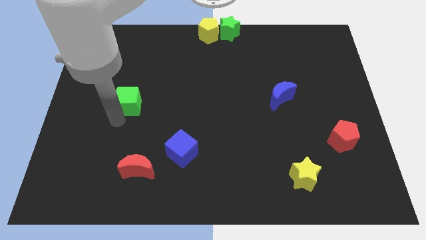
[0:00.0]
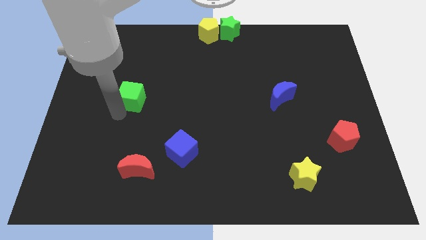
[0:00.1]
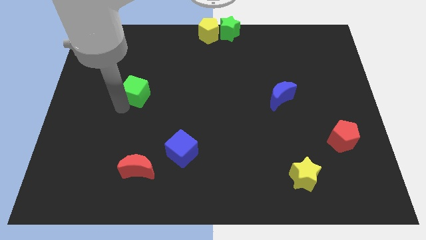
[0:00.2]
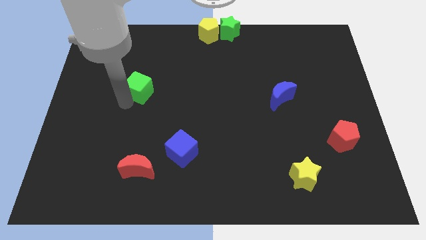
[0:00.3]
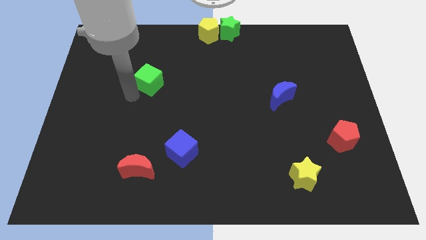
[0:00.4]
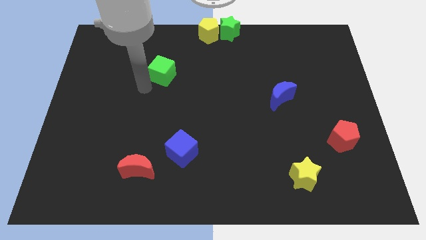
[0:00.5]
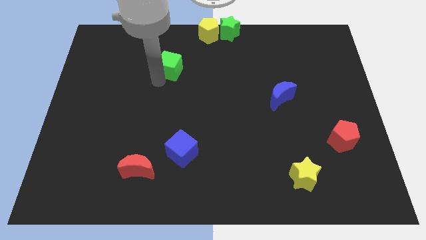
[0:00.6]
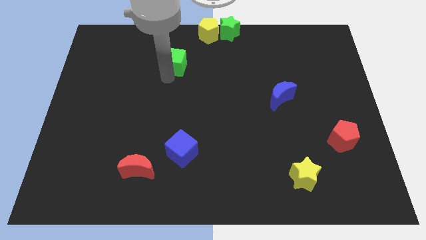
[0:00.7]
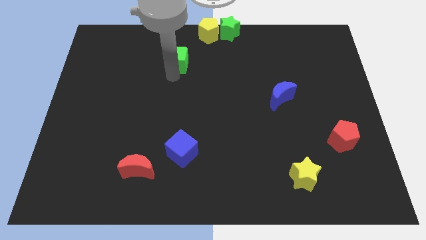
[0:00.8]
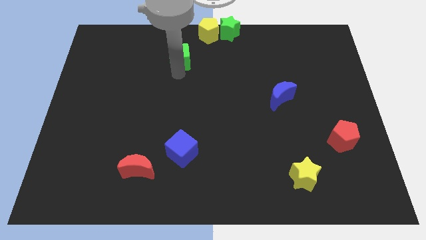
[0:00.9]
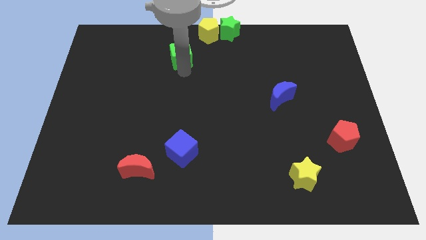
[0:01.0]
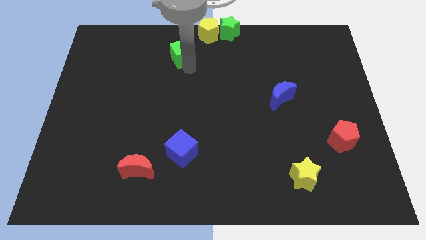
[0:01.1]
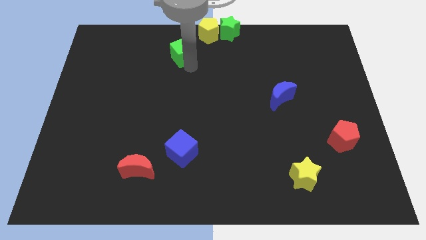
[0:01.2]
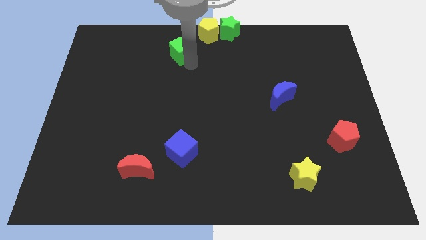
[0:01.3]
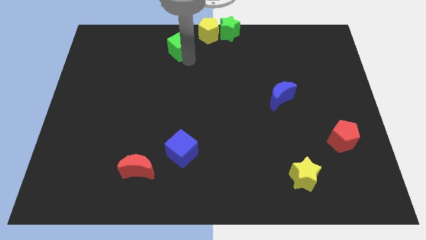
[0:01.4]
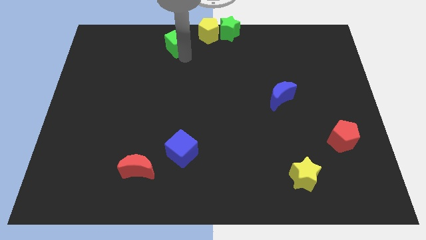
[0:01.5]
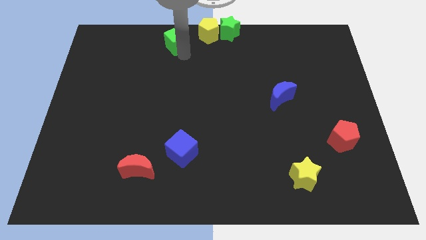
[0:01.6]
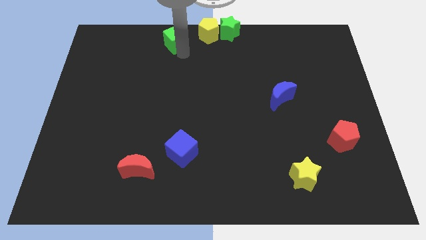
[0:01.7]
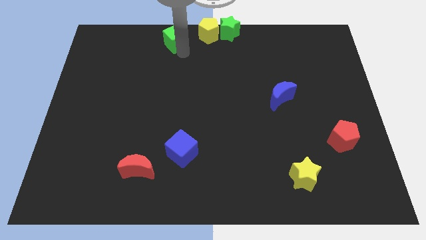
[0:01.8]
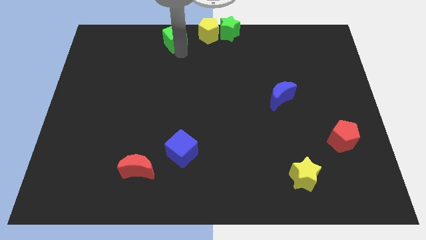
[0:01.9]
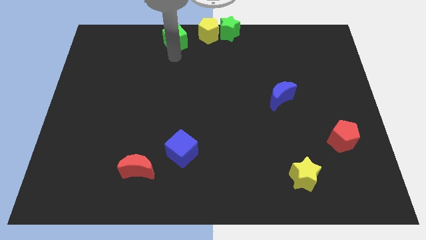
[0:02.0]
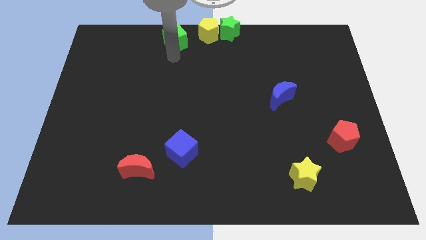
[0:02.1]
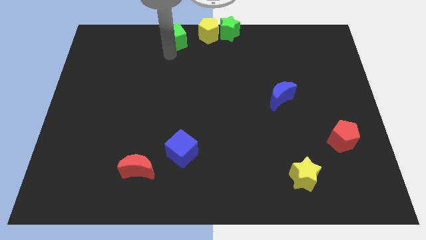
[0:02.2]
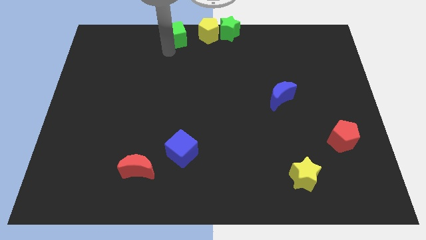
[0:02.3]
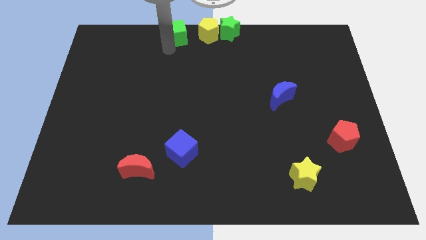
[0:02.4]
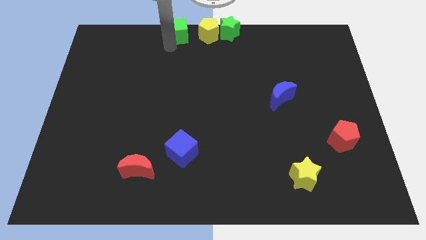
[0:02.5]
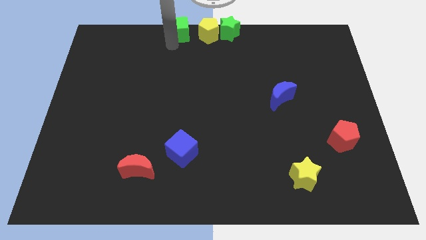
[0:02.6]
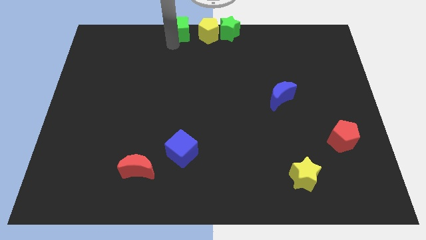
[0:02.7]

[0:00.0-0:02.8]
place the green cube to left side of the yellow pentagon

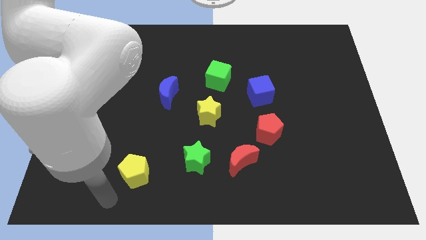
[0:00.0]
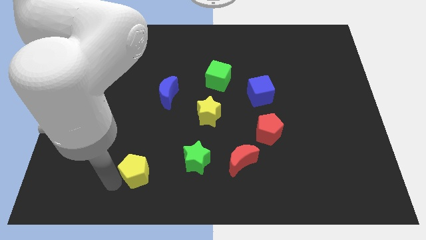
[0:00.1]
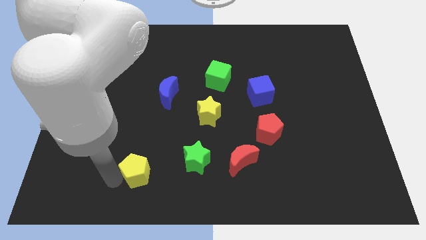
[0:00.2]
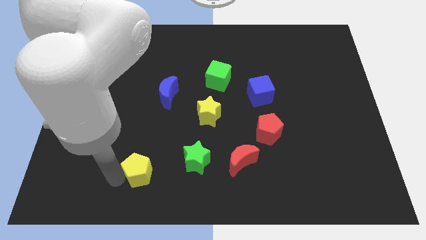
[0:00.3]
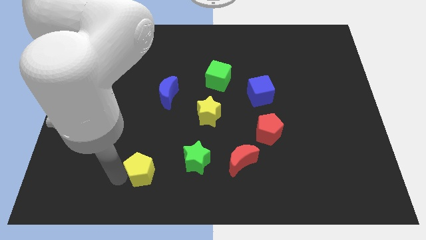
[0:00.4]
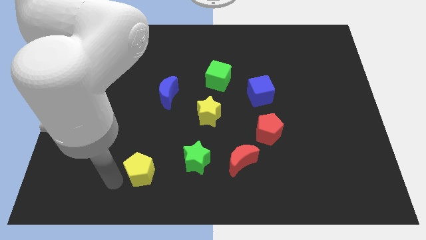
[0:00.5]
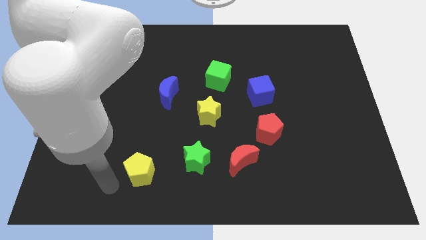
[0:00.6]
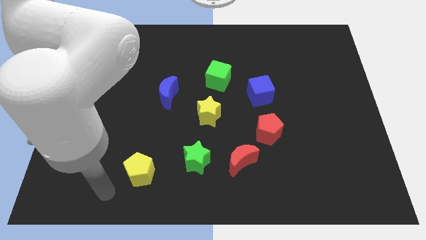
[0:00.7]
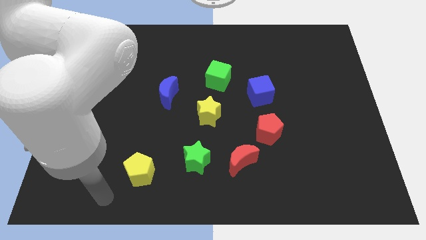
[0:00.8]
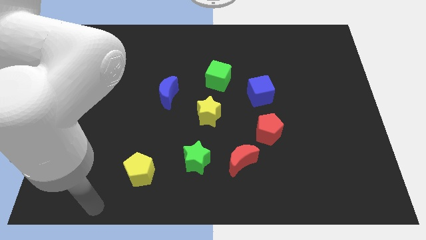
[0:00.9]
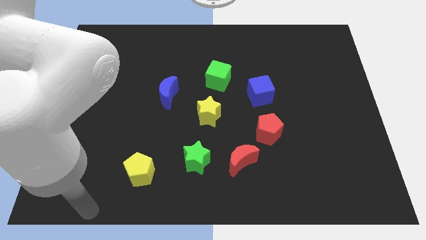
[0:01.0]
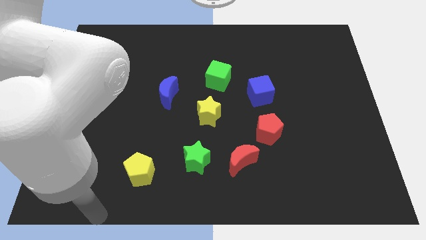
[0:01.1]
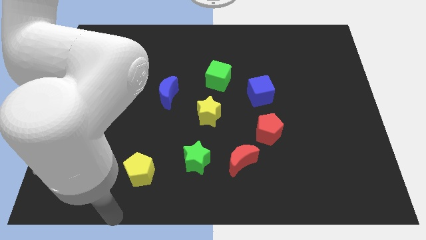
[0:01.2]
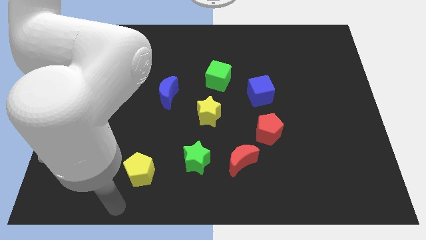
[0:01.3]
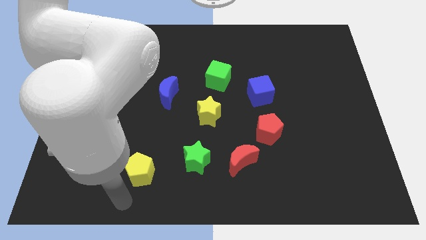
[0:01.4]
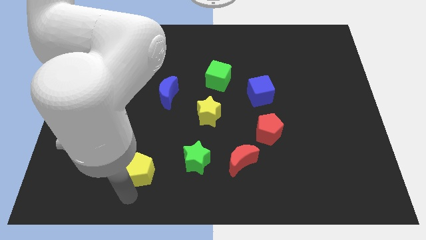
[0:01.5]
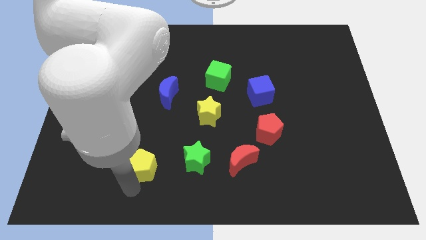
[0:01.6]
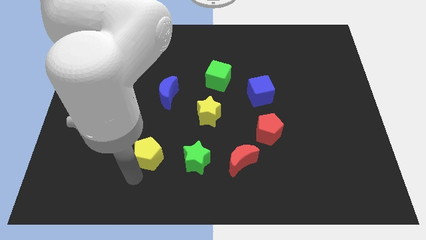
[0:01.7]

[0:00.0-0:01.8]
place the yellow pentagon to the left of green star

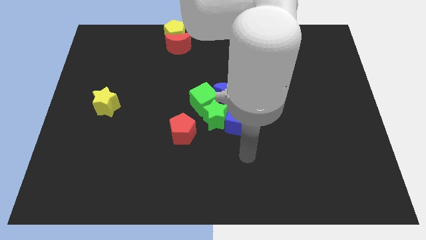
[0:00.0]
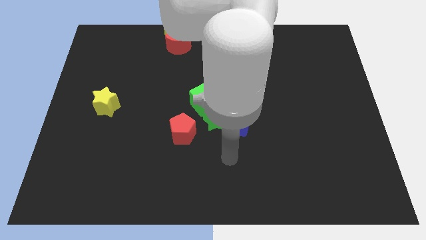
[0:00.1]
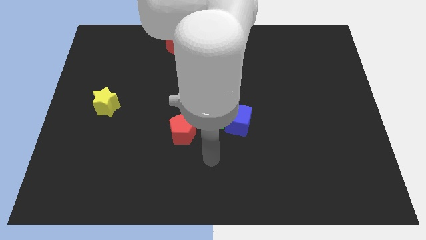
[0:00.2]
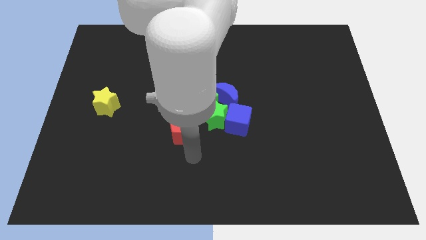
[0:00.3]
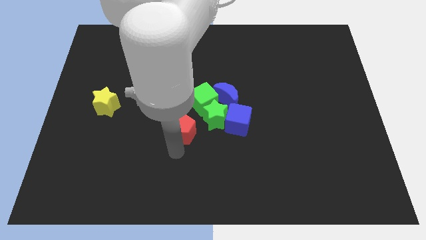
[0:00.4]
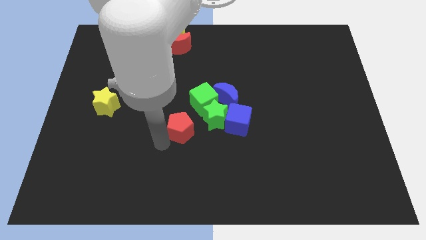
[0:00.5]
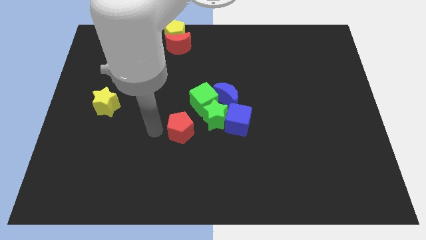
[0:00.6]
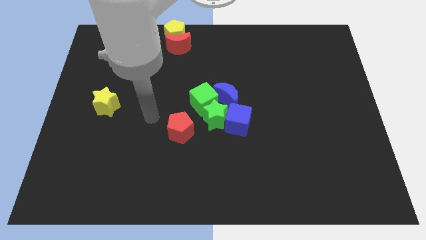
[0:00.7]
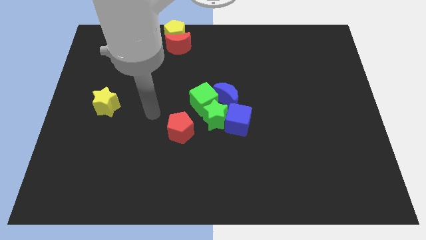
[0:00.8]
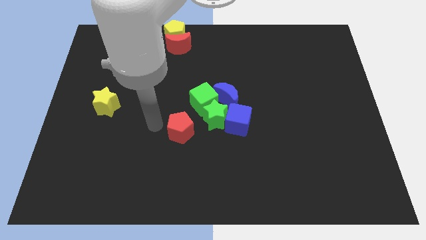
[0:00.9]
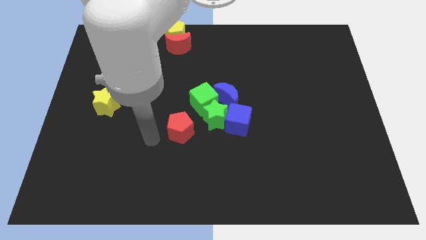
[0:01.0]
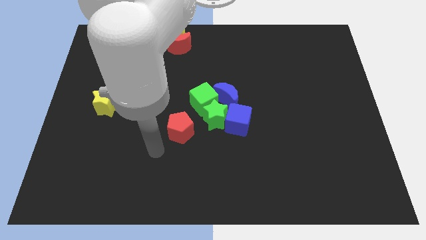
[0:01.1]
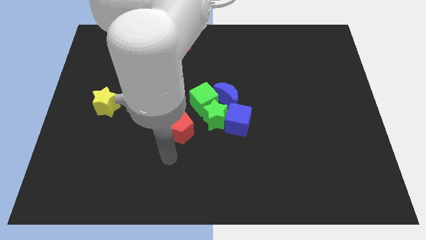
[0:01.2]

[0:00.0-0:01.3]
slightly push the red pentagon to the center

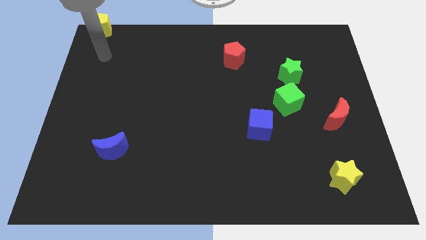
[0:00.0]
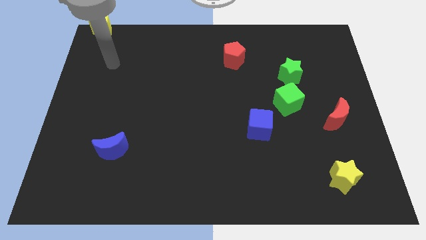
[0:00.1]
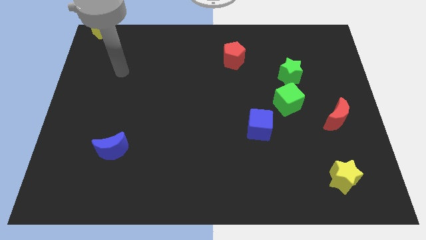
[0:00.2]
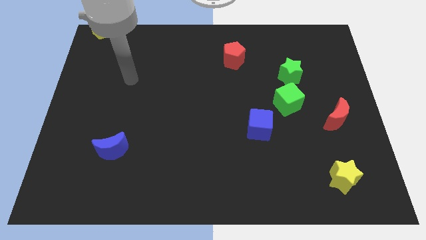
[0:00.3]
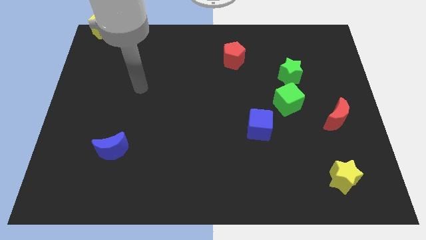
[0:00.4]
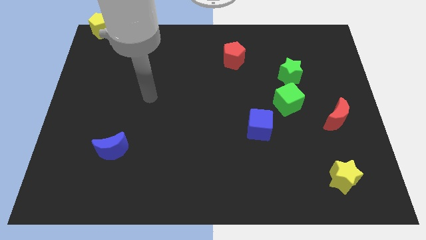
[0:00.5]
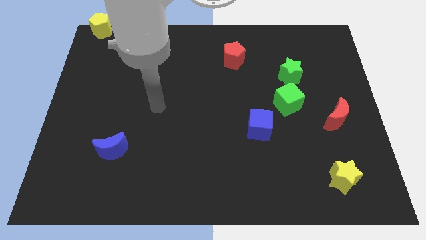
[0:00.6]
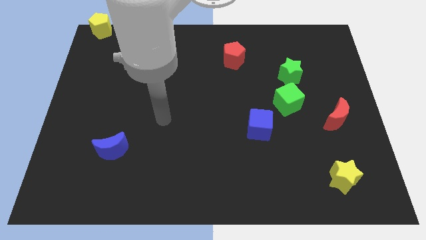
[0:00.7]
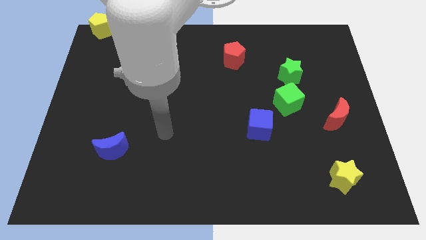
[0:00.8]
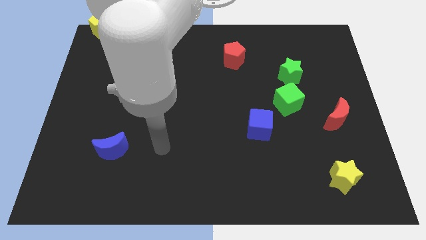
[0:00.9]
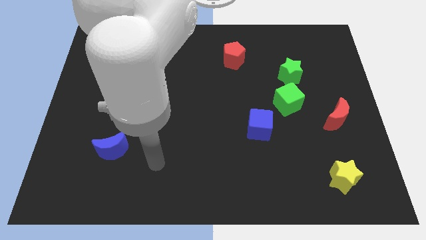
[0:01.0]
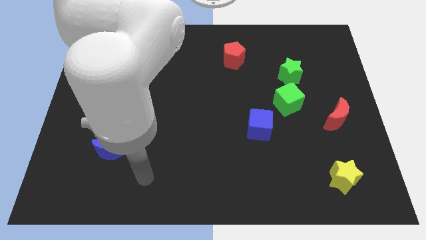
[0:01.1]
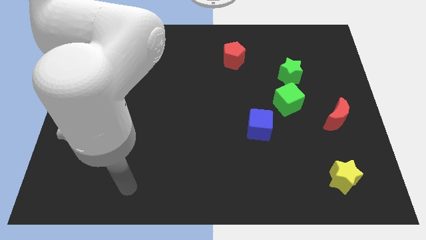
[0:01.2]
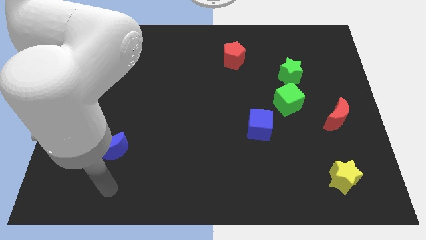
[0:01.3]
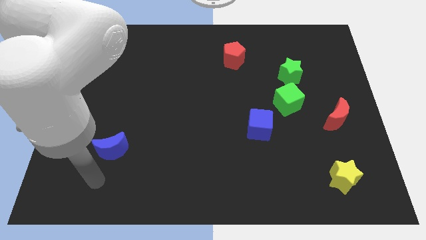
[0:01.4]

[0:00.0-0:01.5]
place your hand under the blue crescent

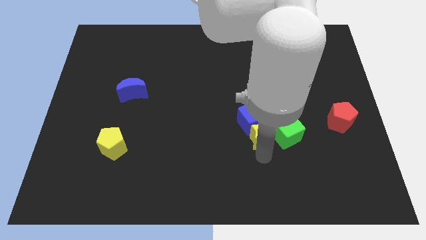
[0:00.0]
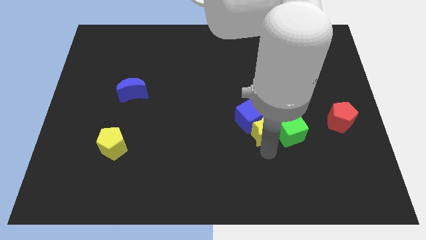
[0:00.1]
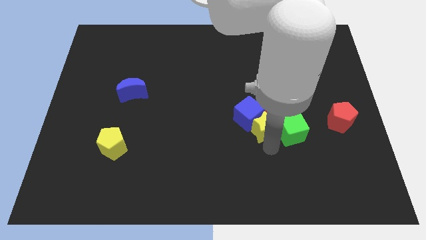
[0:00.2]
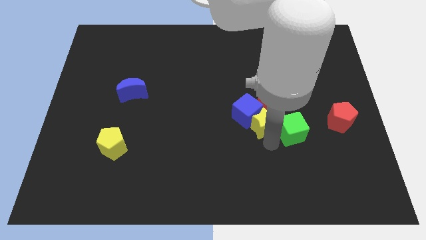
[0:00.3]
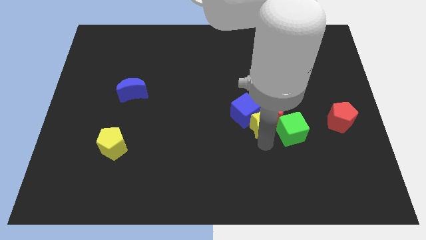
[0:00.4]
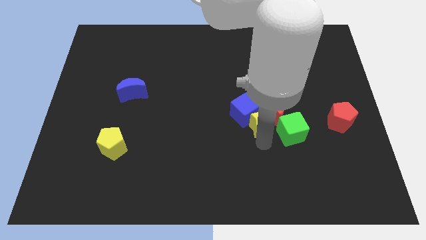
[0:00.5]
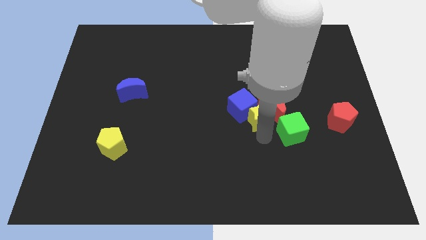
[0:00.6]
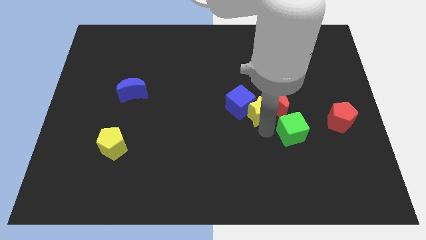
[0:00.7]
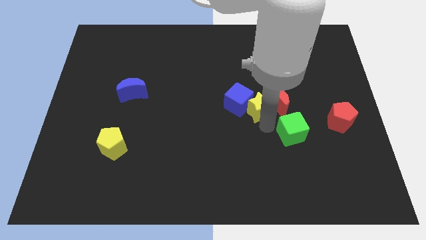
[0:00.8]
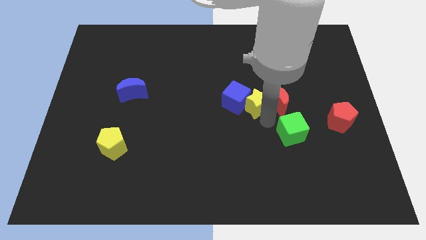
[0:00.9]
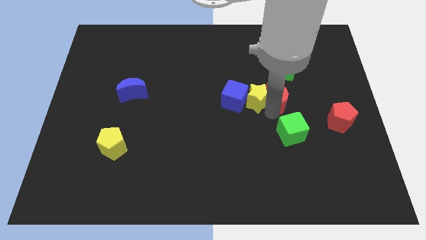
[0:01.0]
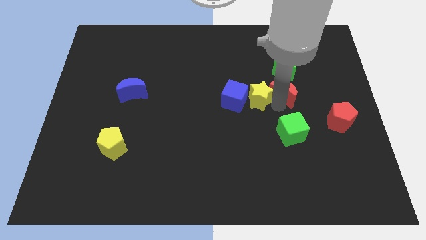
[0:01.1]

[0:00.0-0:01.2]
push the yellow star along with the blue cube slightly to the top

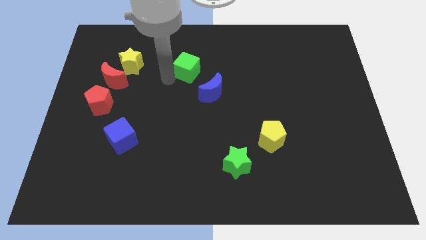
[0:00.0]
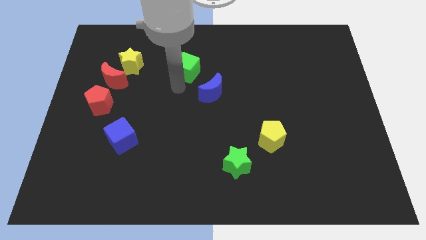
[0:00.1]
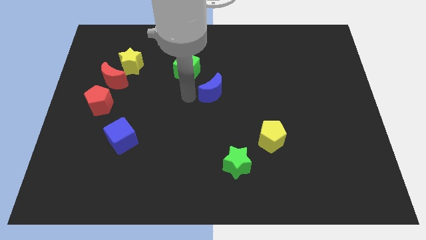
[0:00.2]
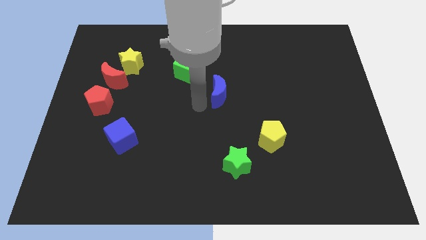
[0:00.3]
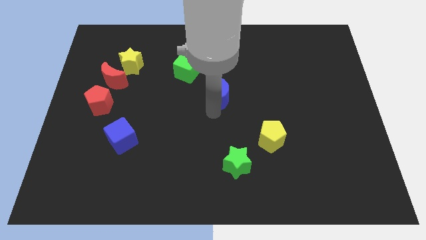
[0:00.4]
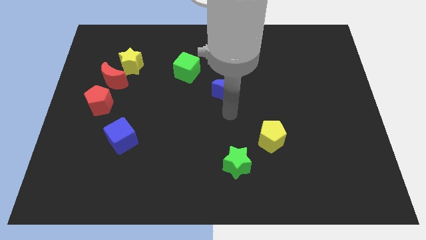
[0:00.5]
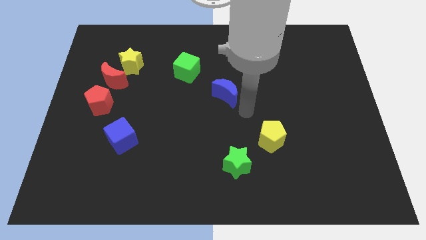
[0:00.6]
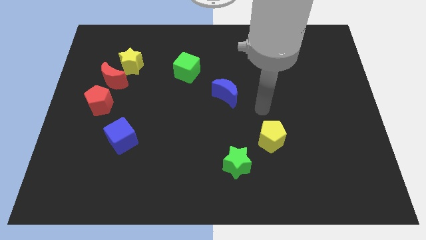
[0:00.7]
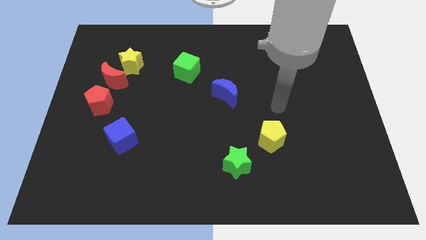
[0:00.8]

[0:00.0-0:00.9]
slightly push the blue crescent
